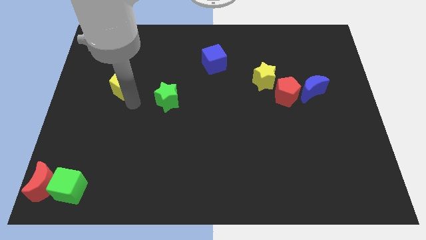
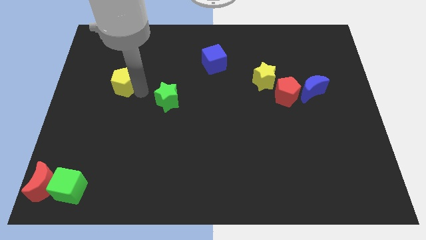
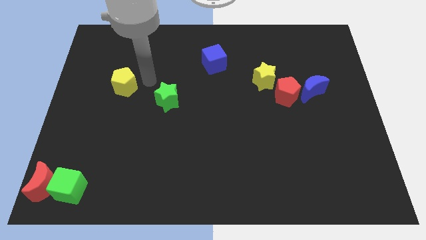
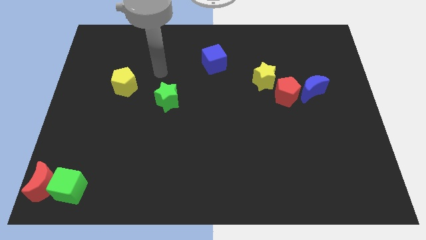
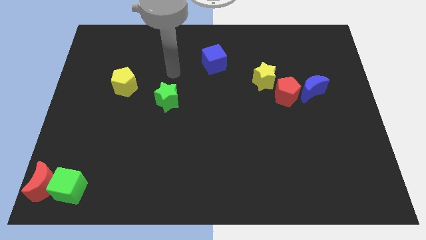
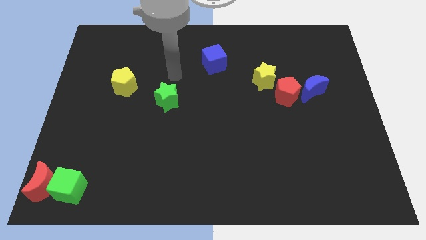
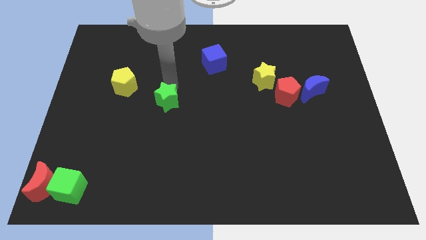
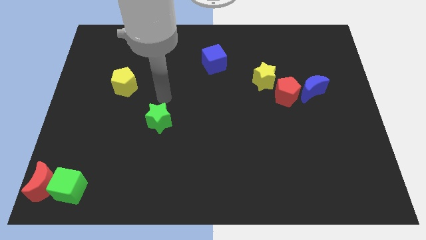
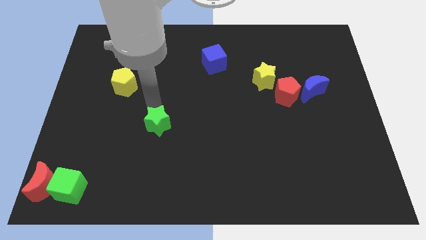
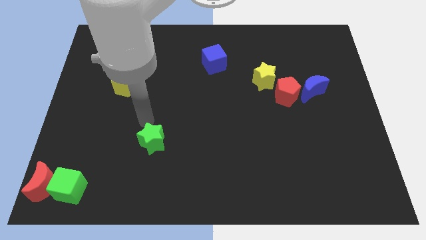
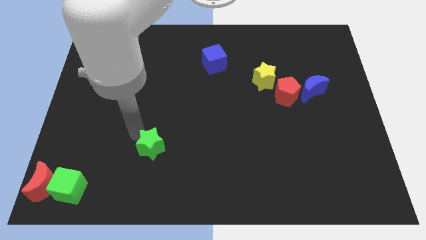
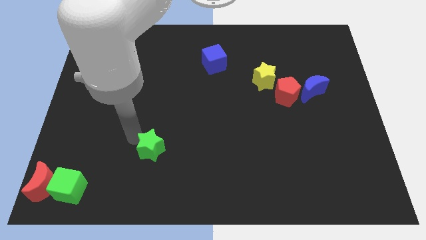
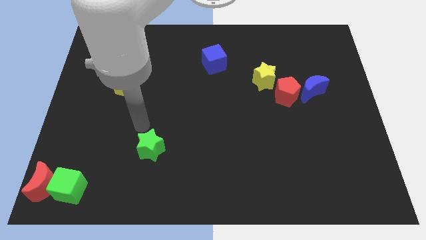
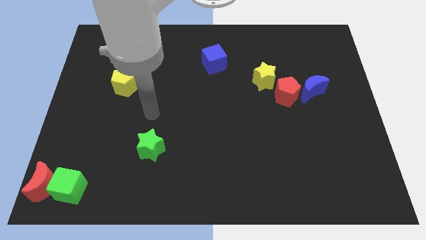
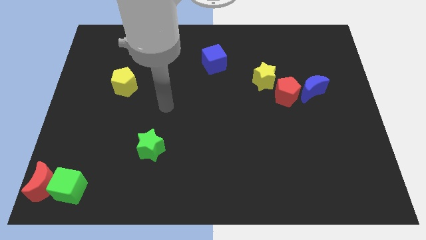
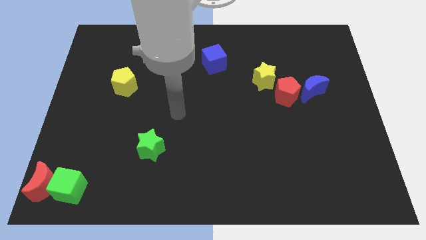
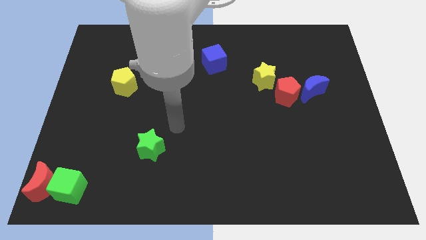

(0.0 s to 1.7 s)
push the green star diagnol to the green cube

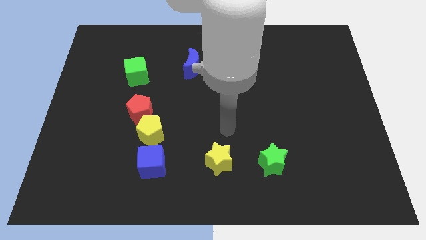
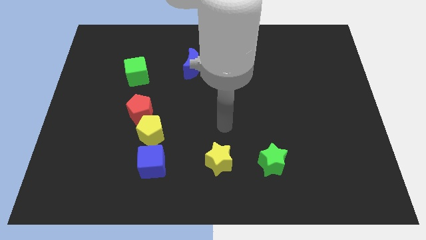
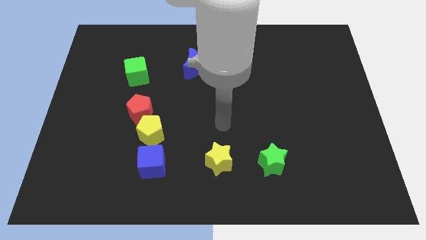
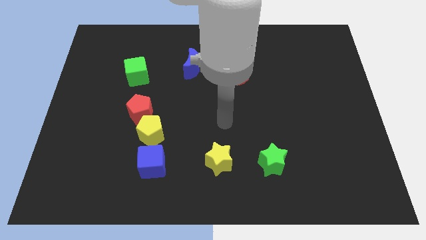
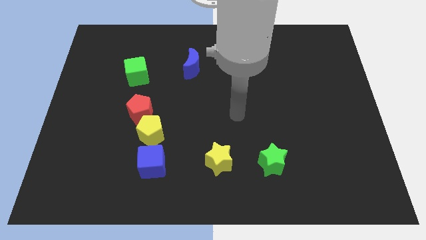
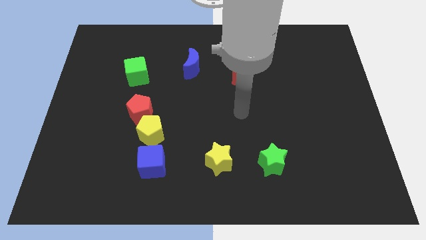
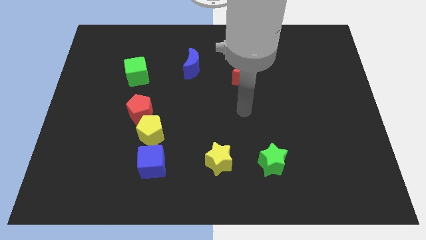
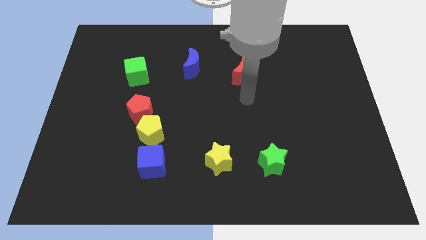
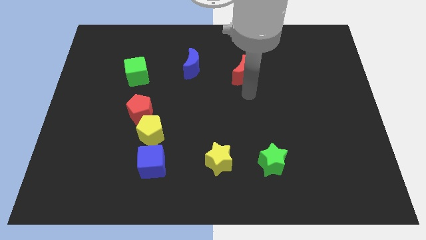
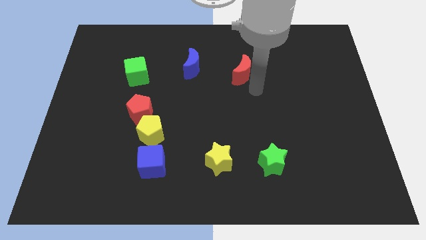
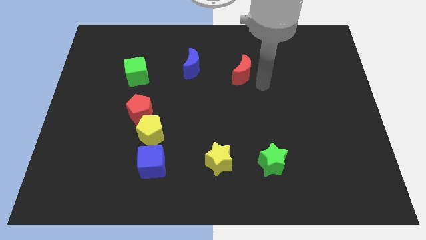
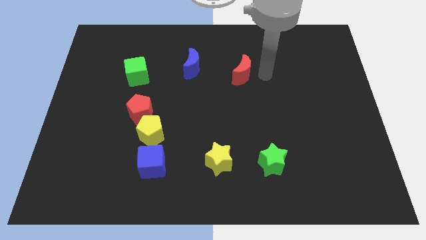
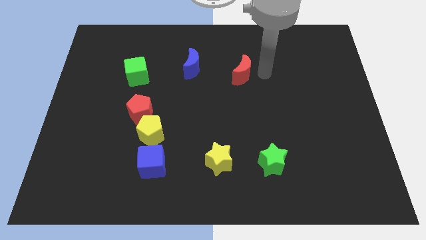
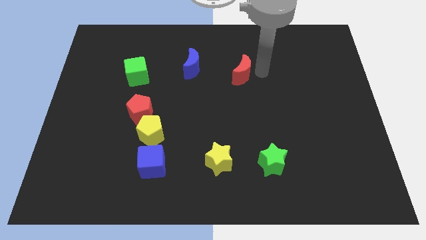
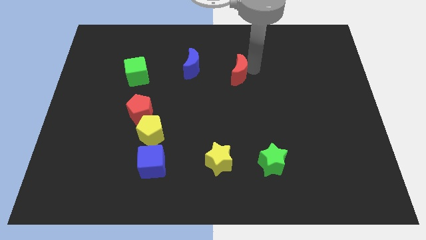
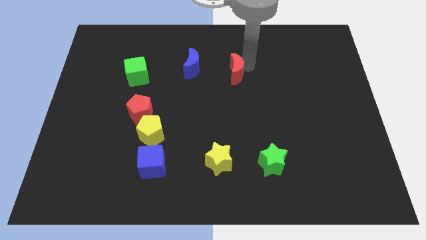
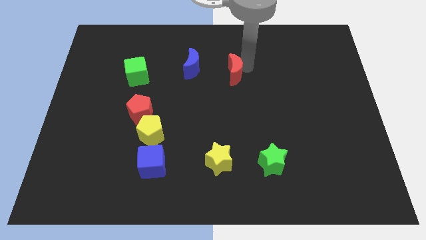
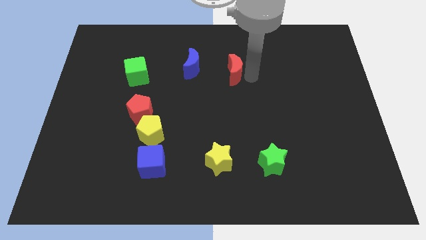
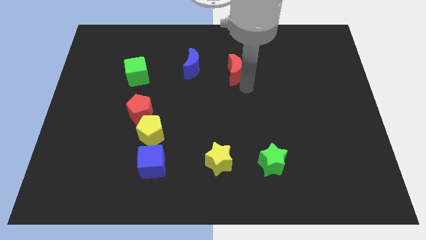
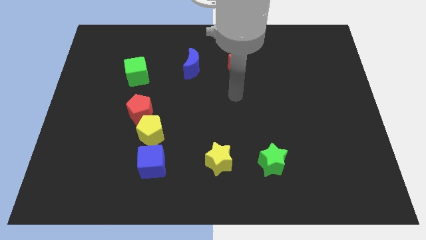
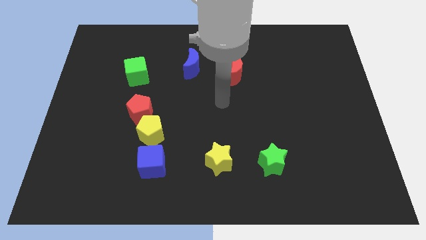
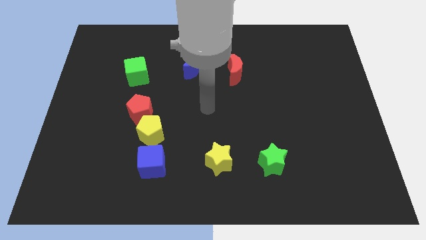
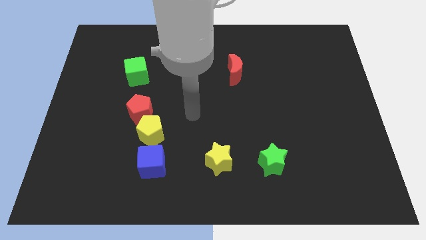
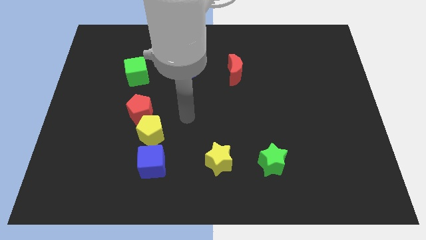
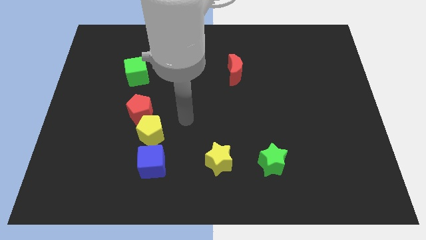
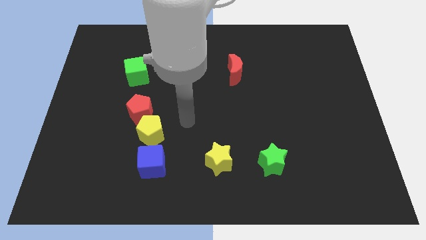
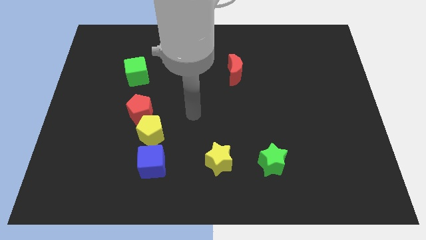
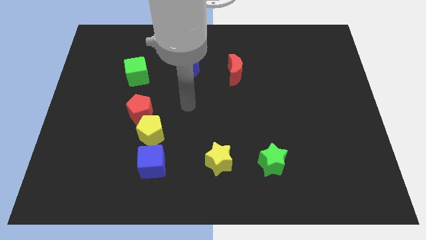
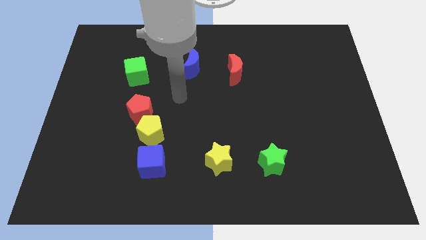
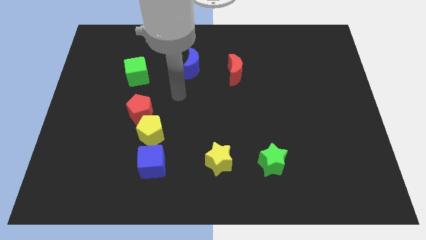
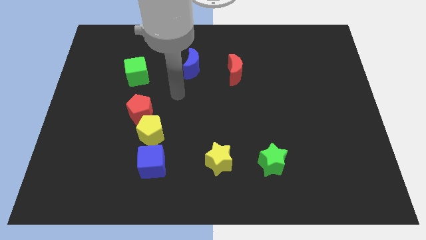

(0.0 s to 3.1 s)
push the red crescent slightly to the left

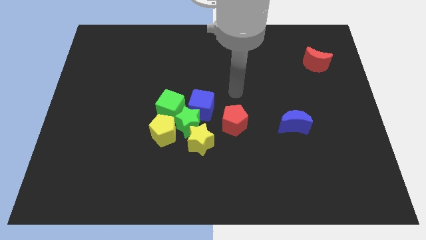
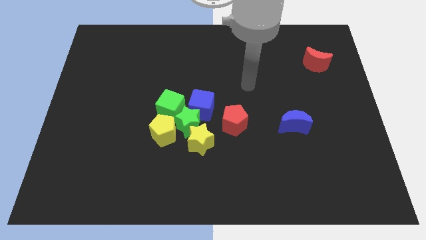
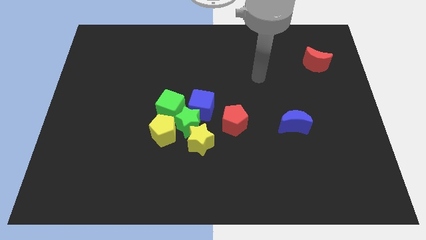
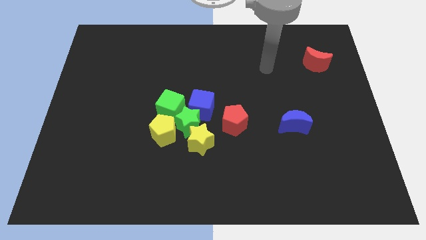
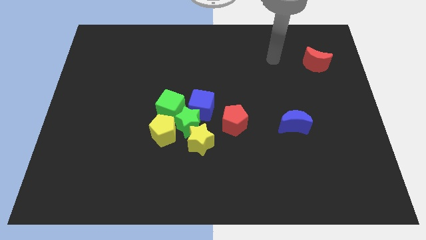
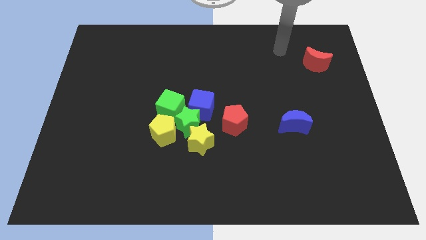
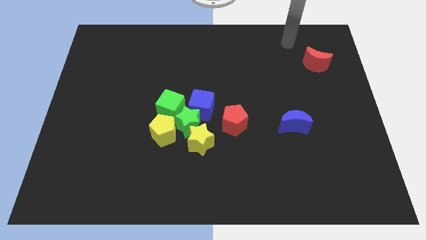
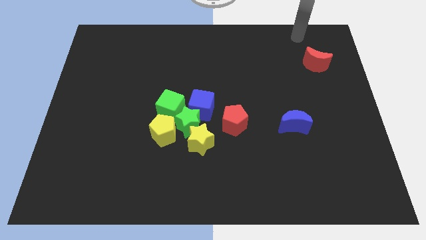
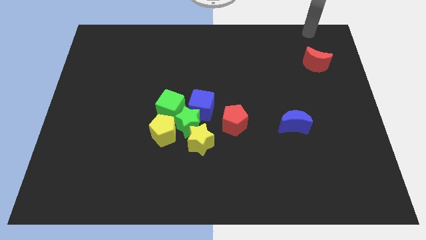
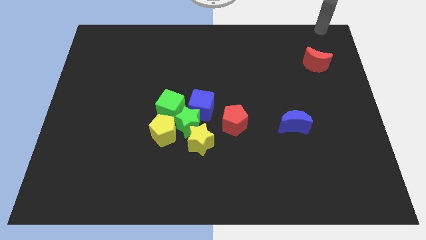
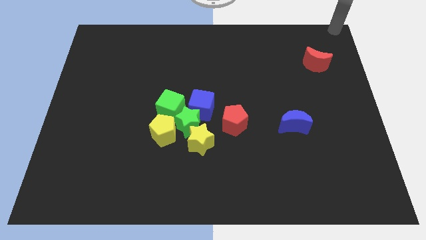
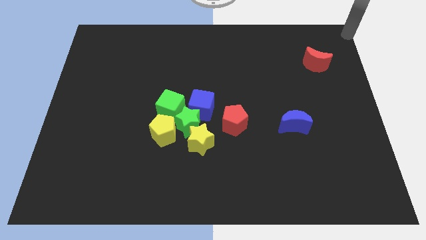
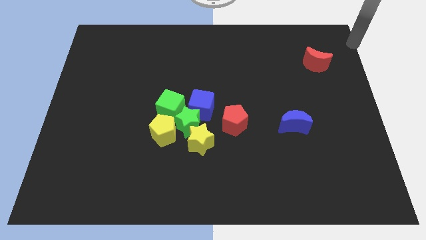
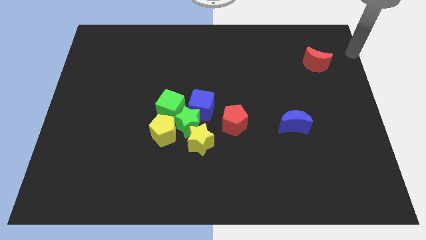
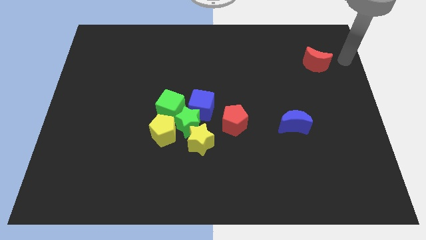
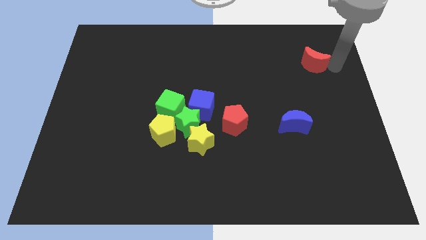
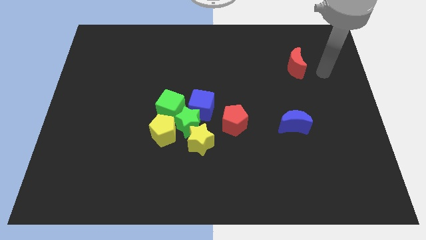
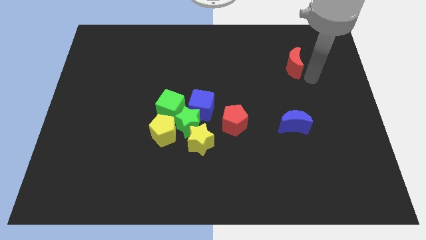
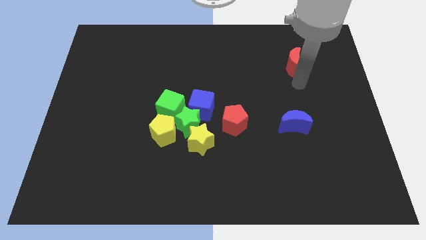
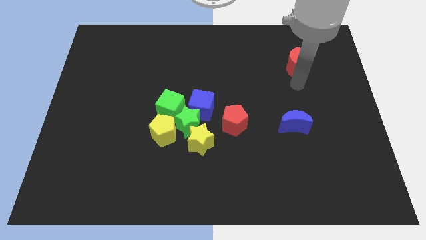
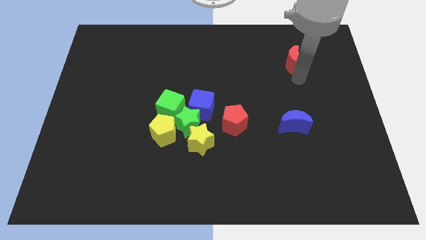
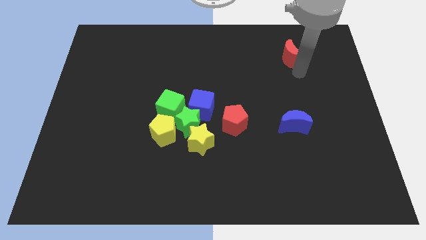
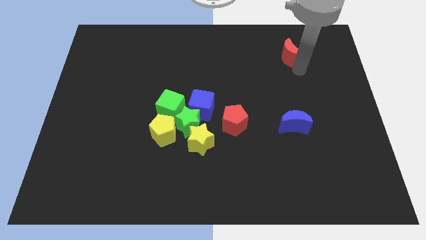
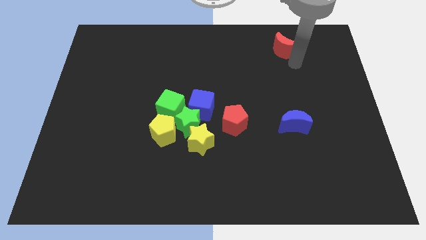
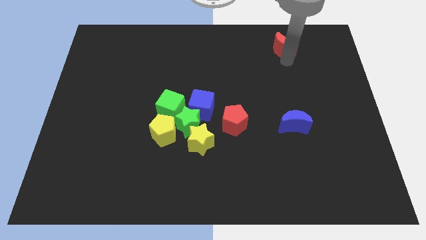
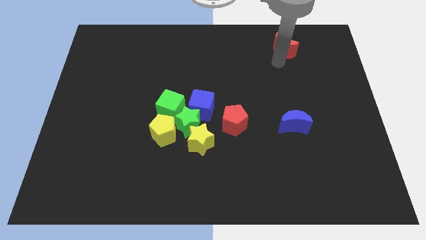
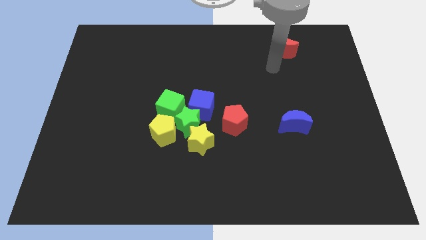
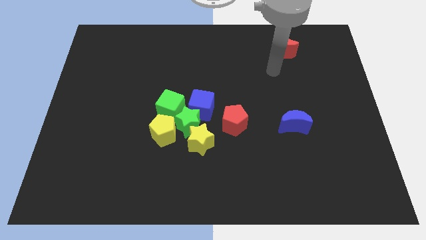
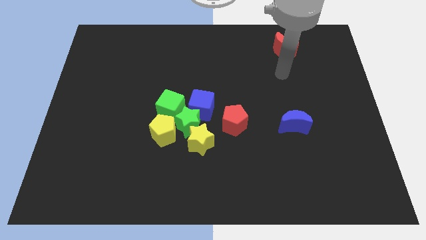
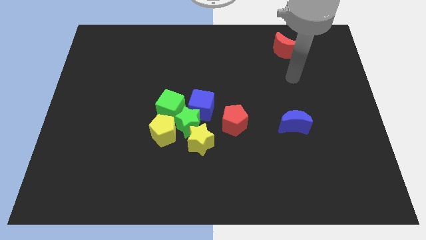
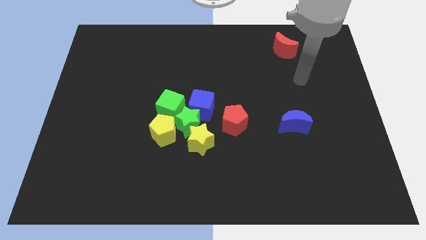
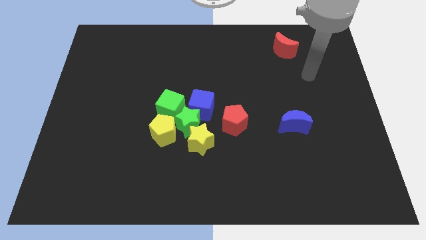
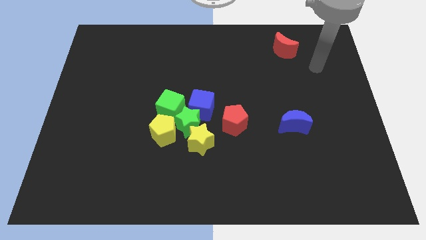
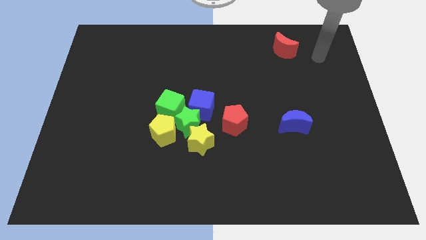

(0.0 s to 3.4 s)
adjust the red crescent diagonally on the top right side of the red pentagon

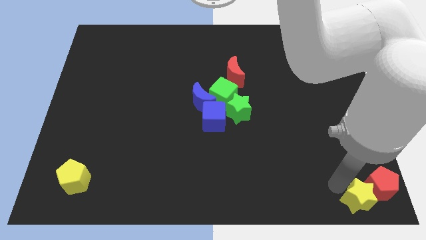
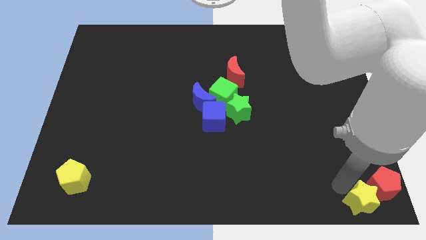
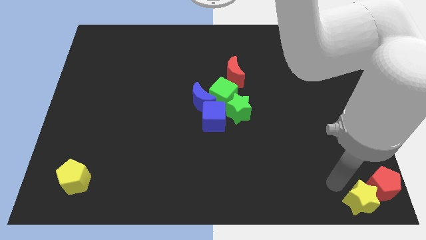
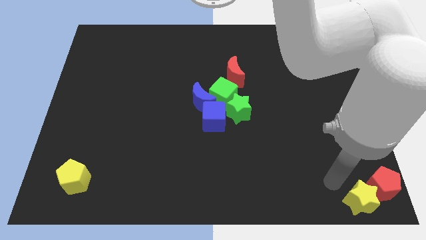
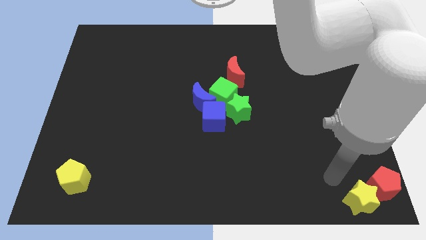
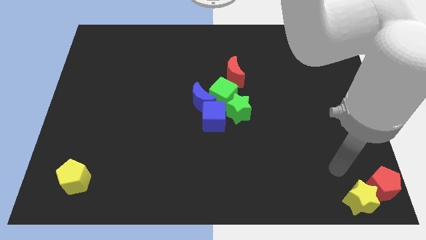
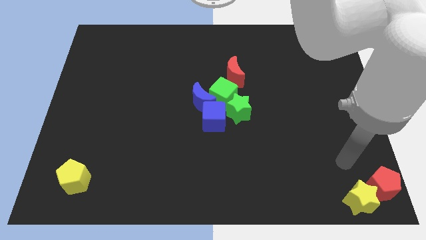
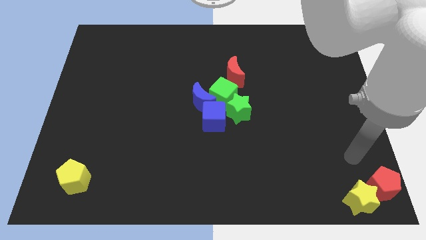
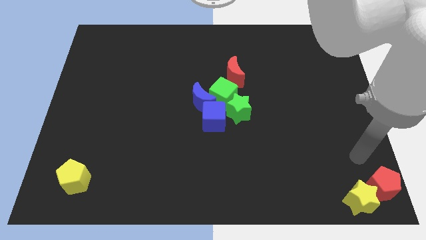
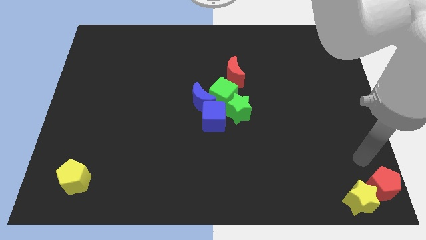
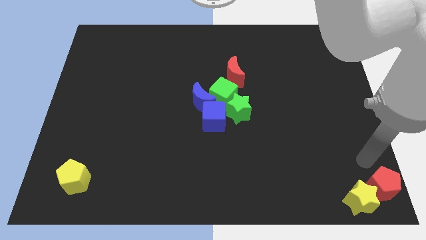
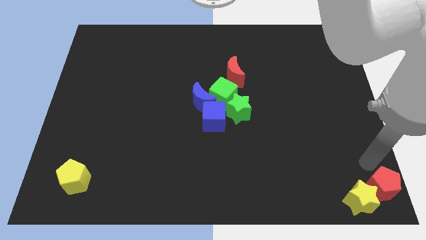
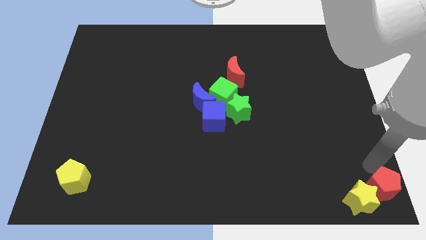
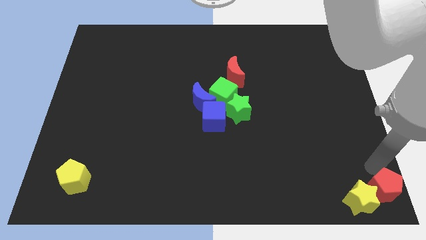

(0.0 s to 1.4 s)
move red pentagon and yellow star towards the bottom right corner
